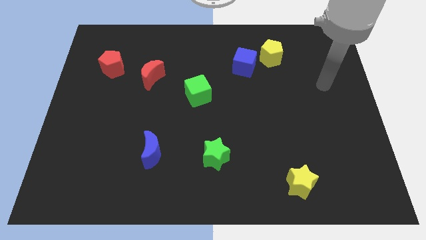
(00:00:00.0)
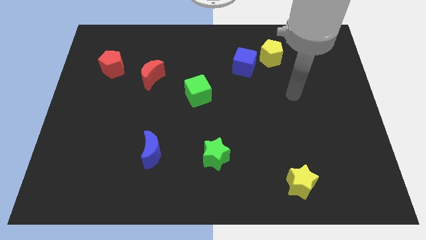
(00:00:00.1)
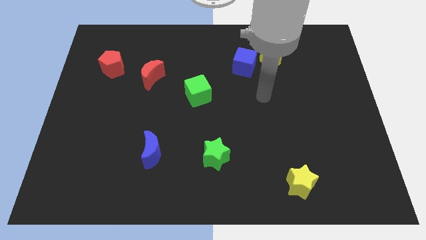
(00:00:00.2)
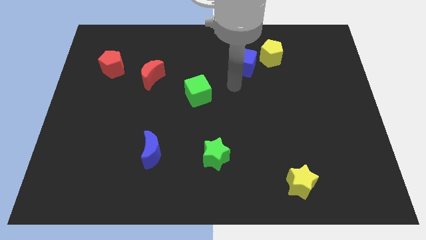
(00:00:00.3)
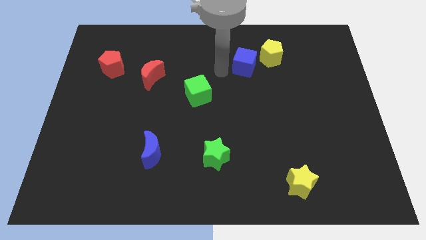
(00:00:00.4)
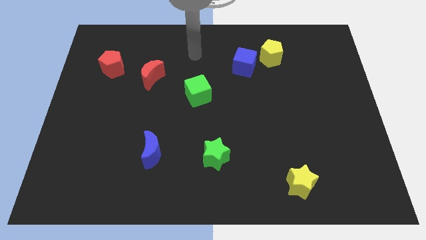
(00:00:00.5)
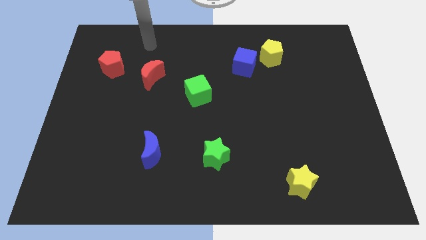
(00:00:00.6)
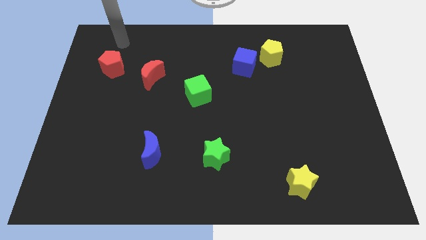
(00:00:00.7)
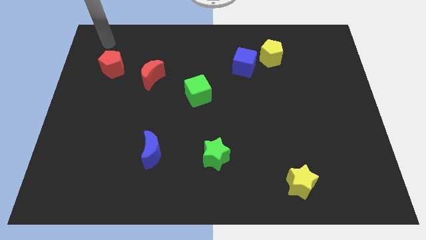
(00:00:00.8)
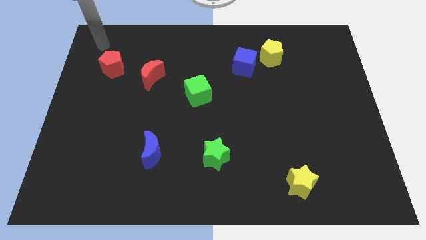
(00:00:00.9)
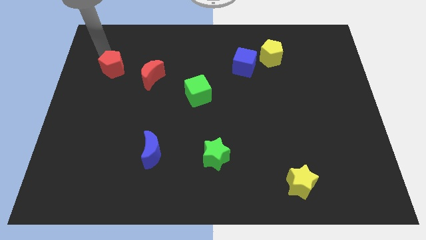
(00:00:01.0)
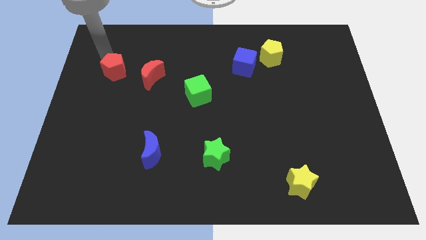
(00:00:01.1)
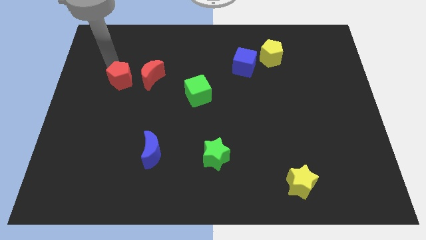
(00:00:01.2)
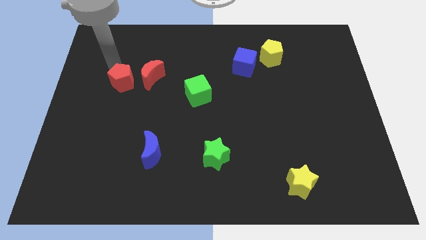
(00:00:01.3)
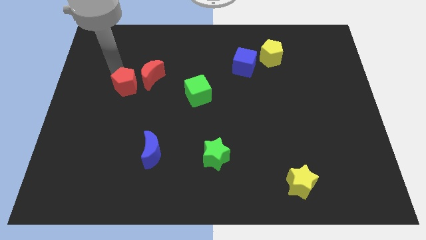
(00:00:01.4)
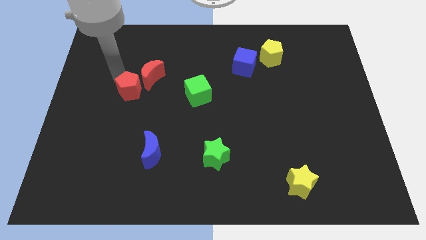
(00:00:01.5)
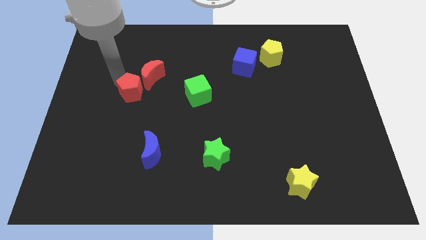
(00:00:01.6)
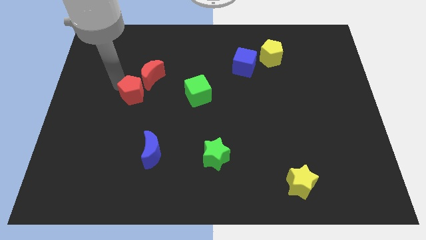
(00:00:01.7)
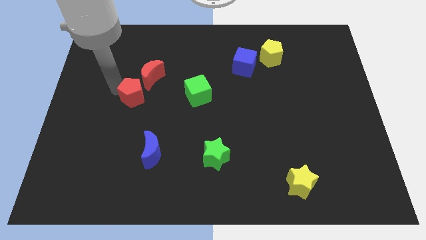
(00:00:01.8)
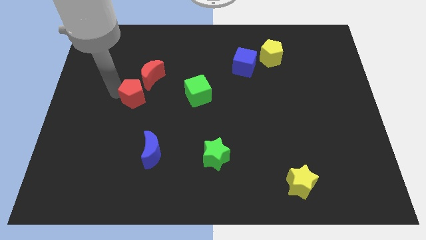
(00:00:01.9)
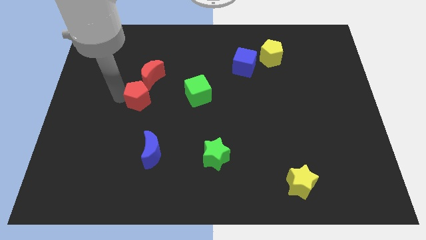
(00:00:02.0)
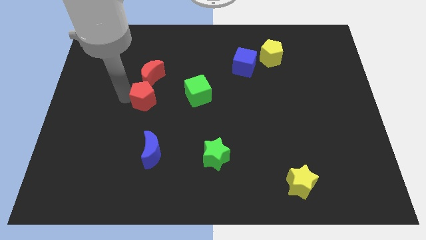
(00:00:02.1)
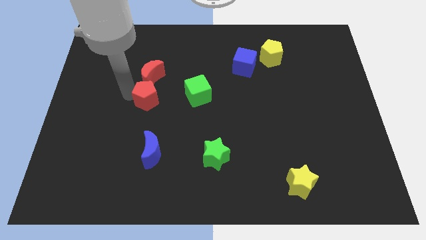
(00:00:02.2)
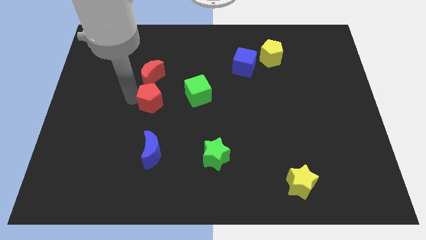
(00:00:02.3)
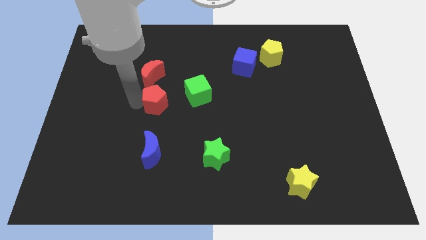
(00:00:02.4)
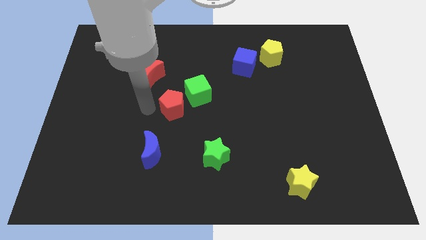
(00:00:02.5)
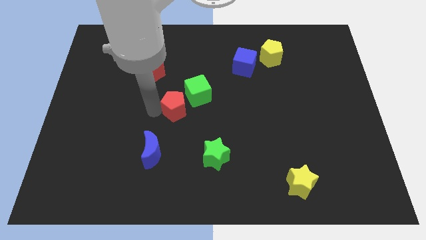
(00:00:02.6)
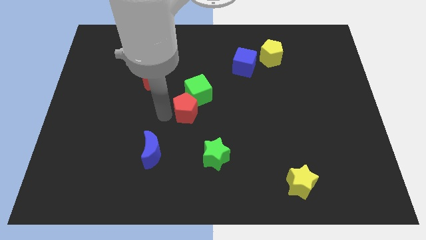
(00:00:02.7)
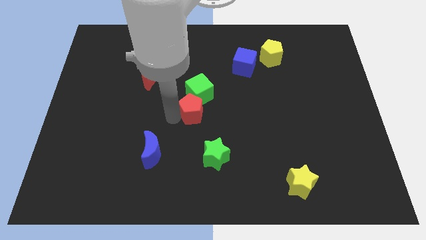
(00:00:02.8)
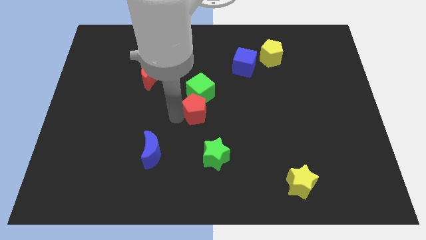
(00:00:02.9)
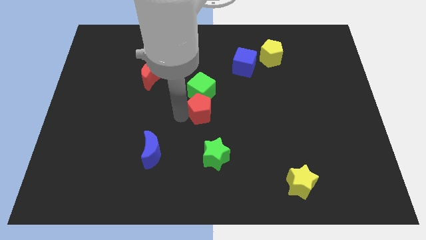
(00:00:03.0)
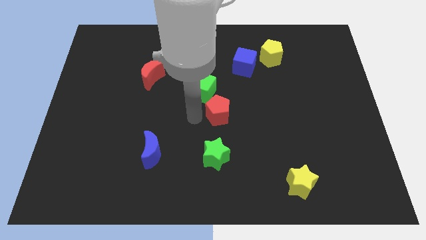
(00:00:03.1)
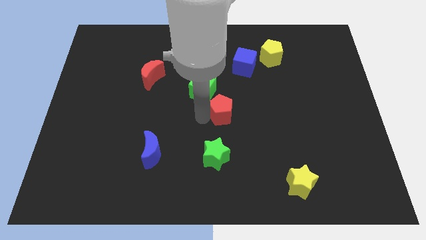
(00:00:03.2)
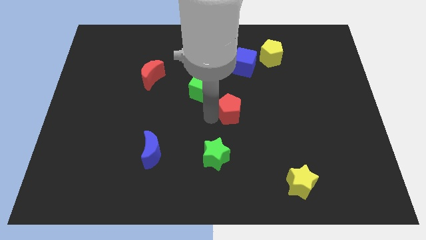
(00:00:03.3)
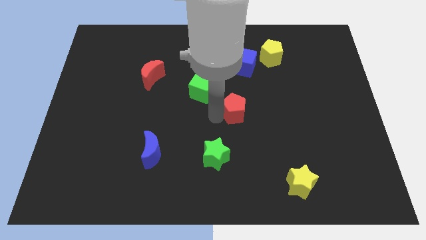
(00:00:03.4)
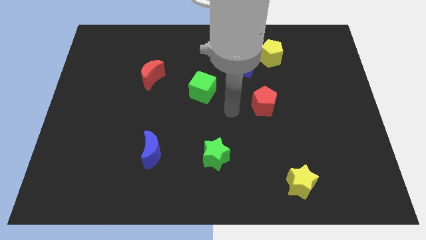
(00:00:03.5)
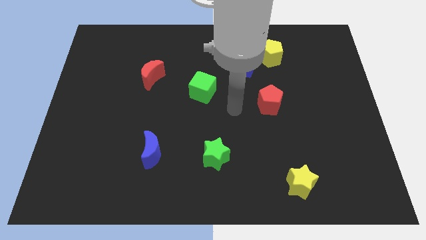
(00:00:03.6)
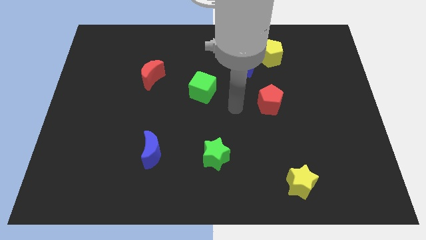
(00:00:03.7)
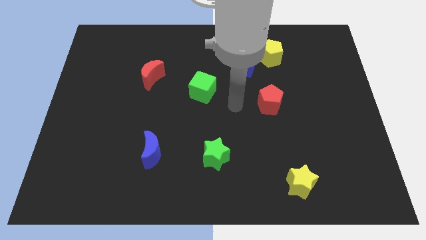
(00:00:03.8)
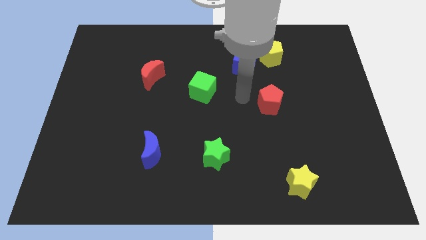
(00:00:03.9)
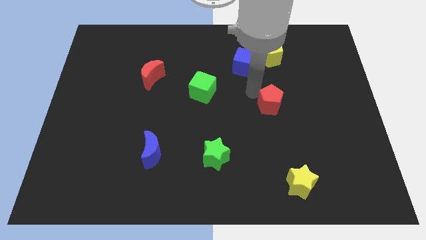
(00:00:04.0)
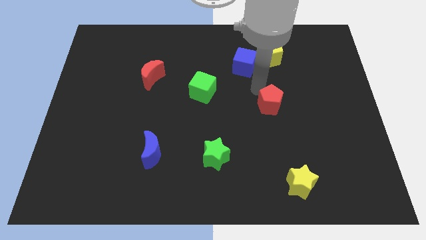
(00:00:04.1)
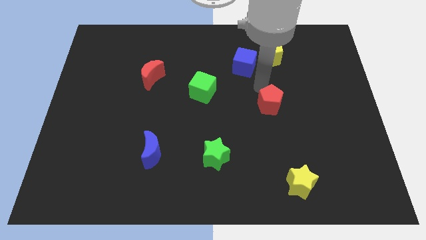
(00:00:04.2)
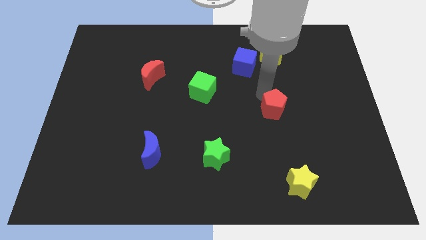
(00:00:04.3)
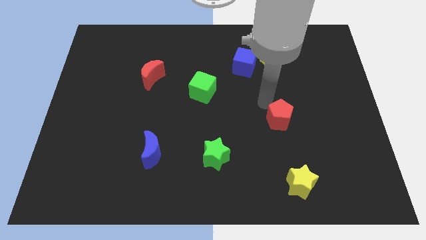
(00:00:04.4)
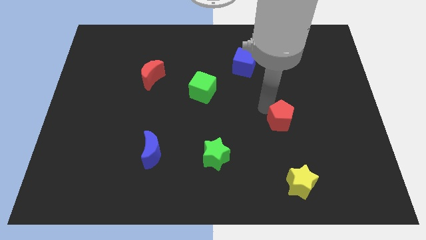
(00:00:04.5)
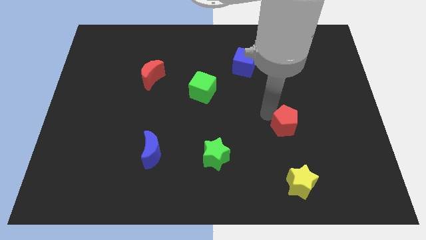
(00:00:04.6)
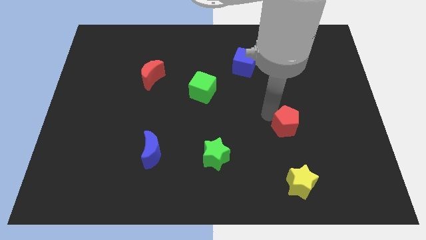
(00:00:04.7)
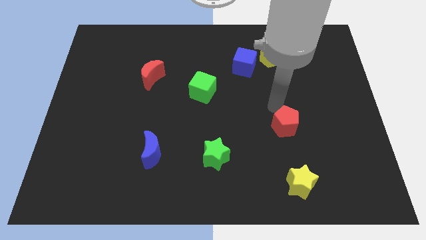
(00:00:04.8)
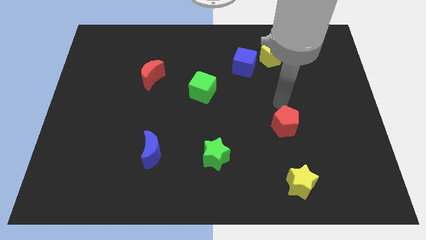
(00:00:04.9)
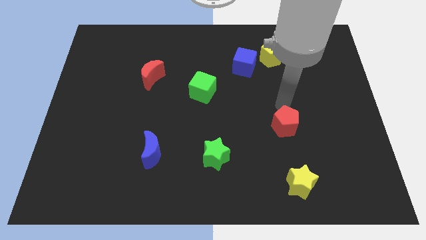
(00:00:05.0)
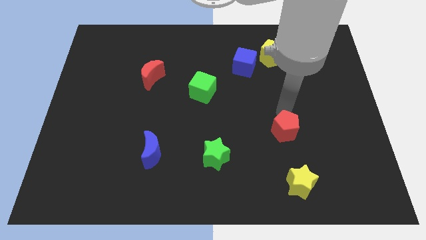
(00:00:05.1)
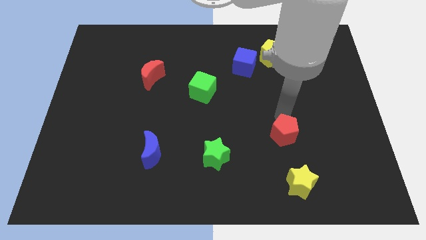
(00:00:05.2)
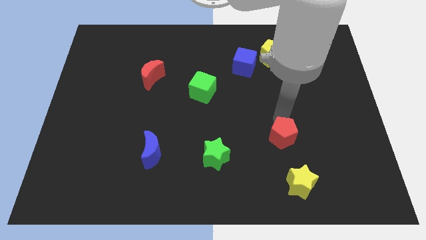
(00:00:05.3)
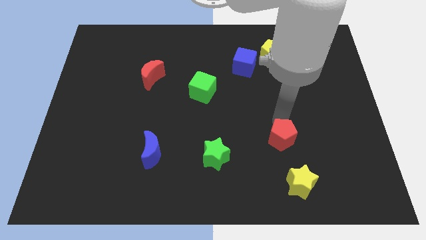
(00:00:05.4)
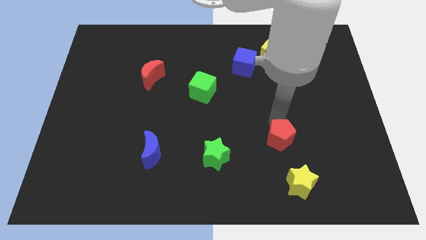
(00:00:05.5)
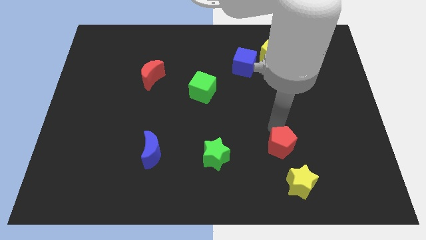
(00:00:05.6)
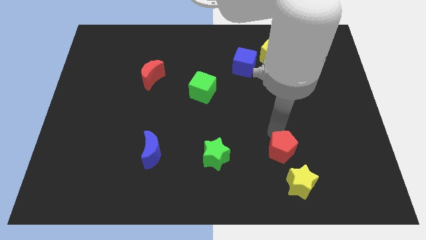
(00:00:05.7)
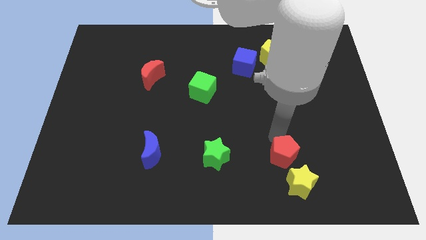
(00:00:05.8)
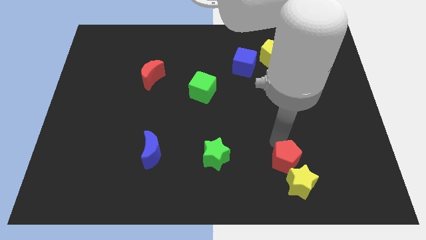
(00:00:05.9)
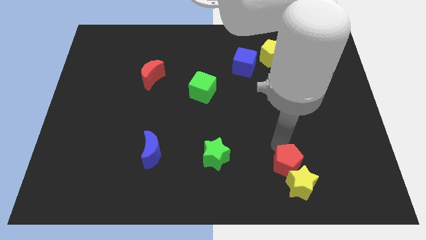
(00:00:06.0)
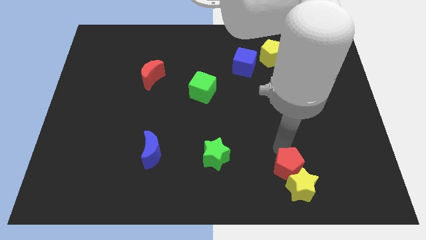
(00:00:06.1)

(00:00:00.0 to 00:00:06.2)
slide the red pentagon close to the yellow star

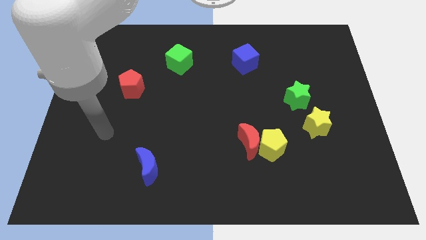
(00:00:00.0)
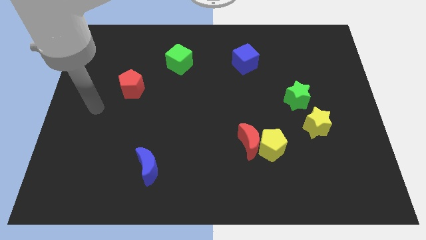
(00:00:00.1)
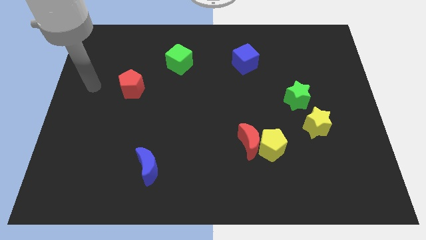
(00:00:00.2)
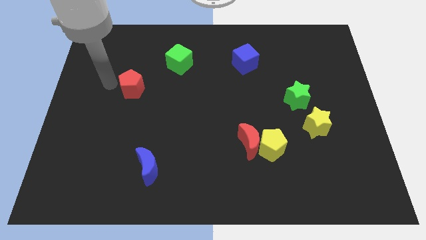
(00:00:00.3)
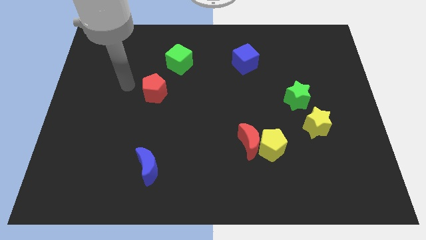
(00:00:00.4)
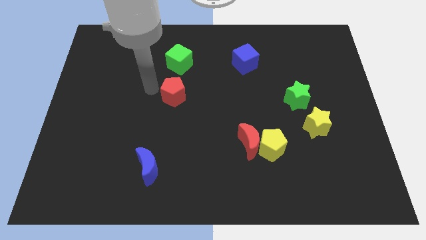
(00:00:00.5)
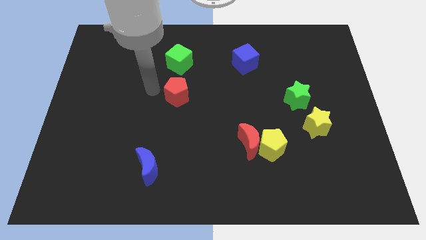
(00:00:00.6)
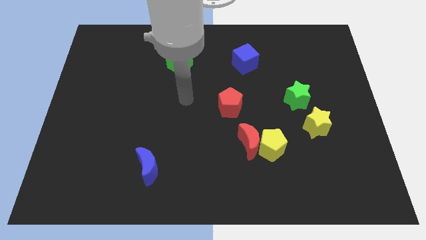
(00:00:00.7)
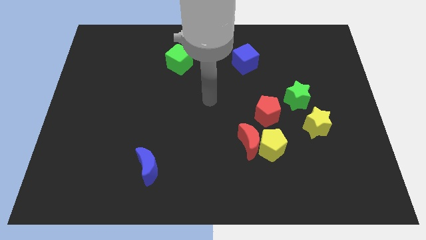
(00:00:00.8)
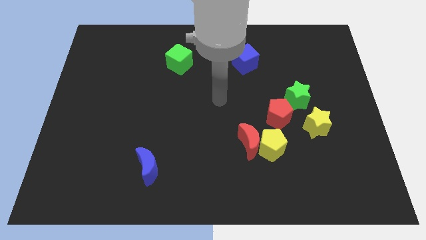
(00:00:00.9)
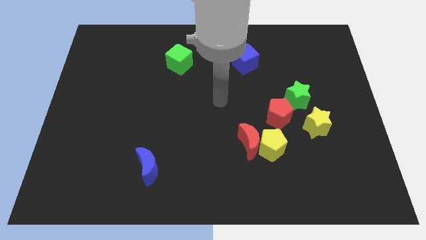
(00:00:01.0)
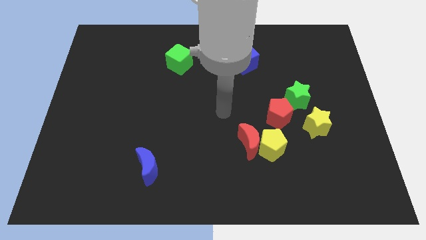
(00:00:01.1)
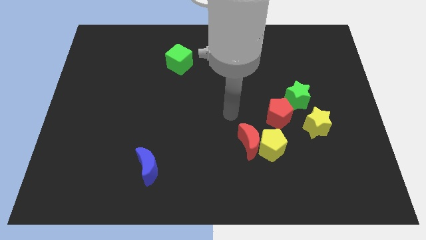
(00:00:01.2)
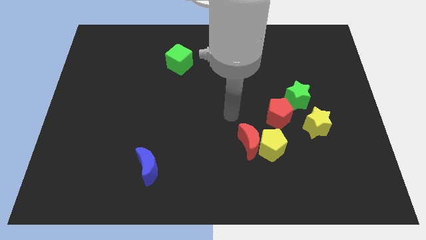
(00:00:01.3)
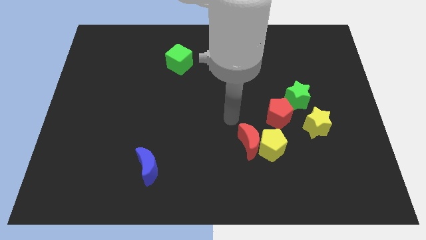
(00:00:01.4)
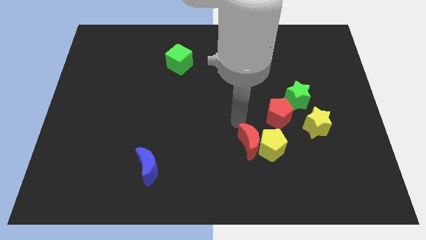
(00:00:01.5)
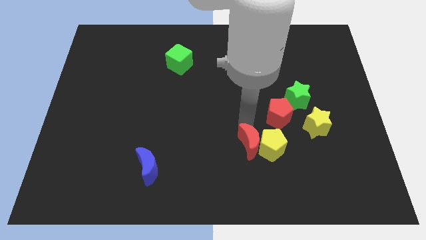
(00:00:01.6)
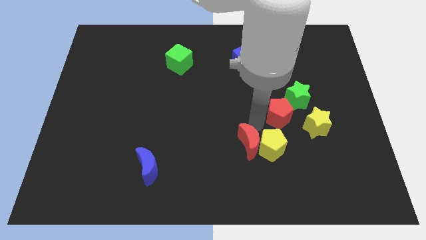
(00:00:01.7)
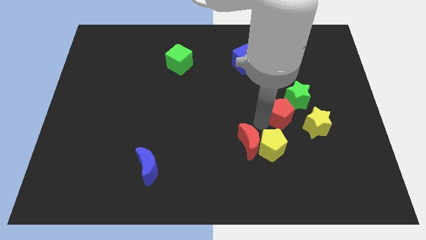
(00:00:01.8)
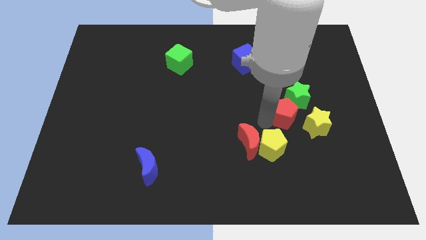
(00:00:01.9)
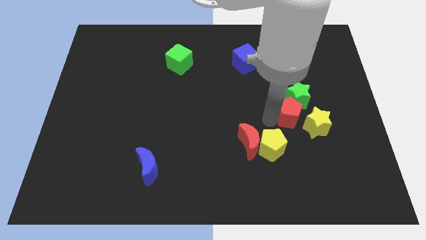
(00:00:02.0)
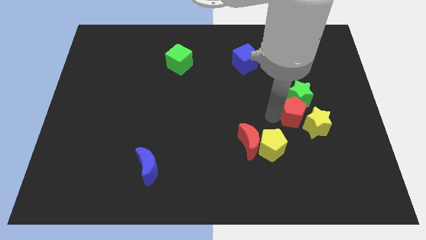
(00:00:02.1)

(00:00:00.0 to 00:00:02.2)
slide the red pentagon close to the green star
